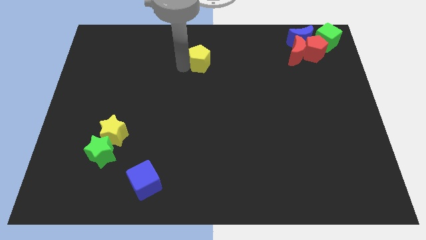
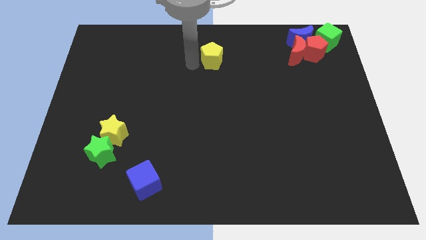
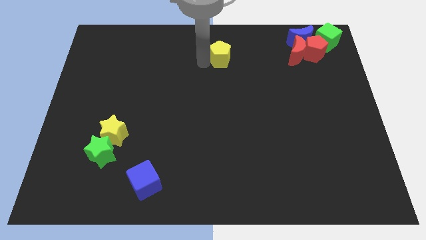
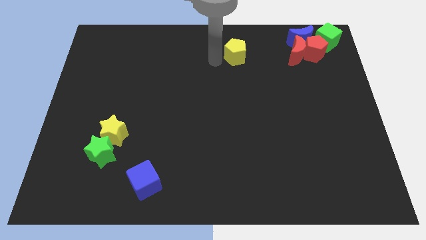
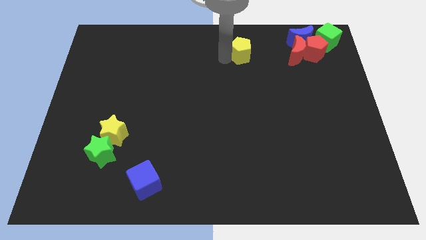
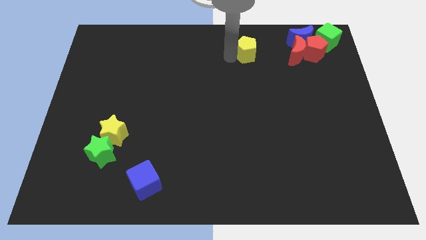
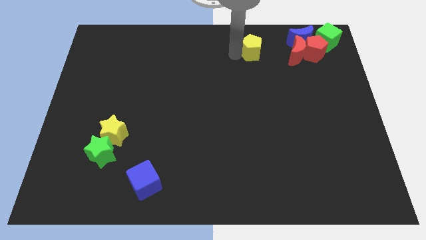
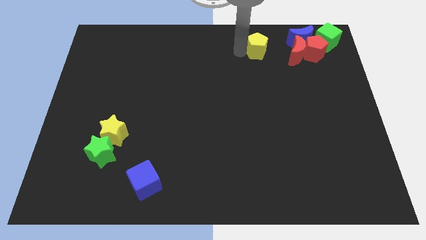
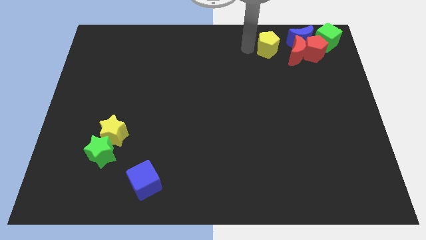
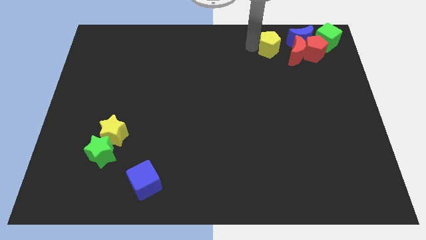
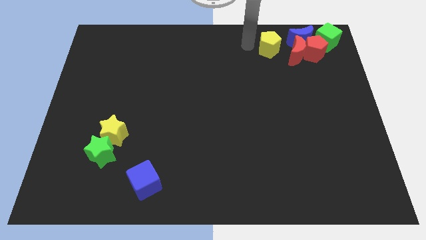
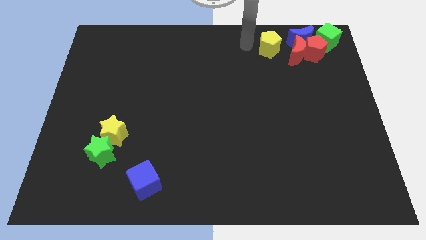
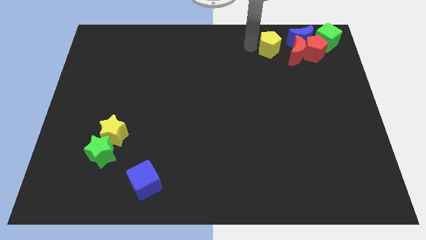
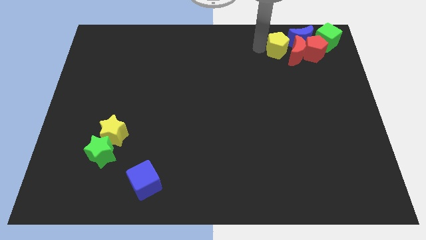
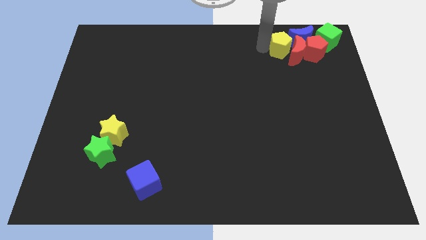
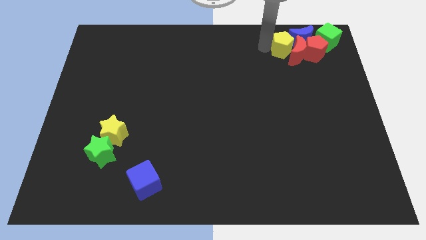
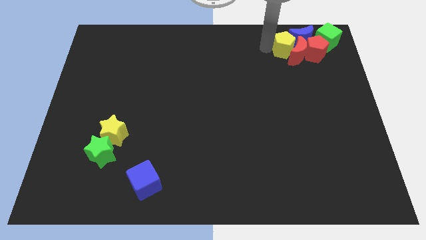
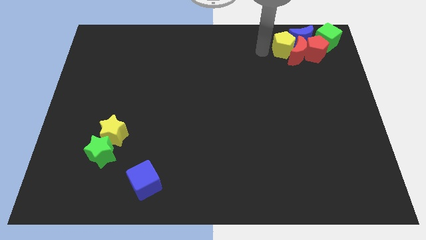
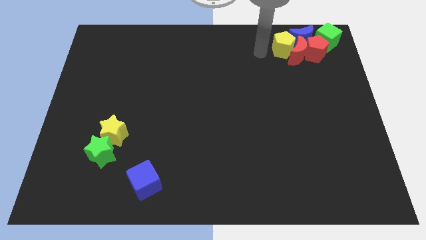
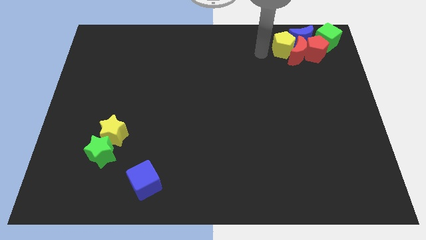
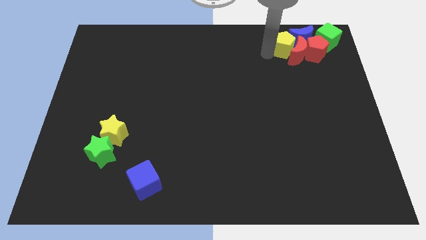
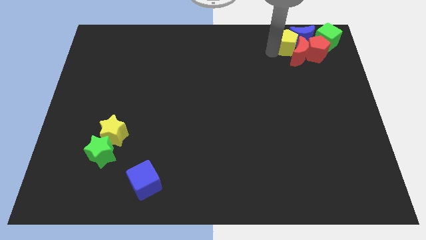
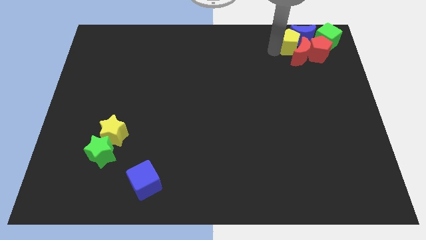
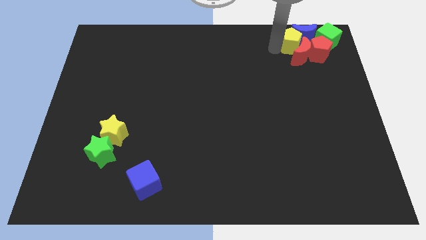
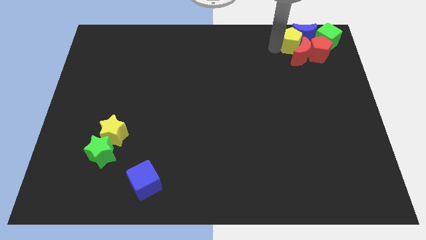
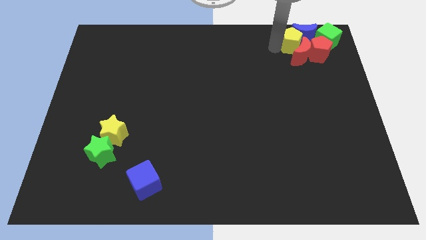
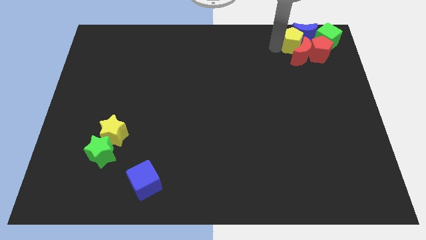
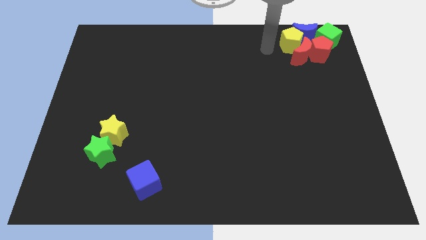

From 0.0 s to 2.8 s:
push the yellow pentagon into the group of blocks

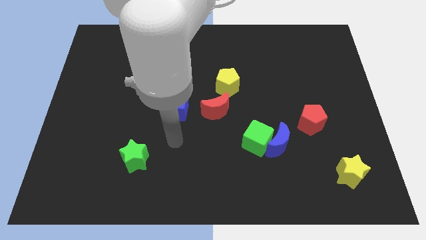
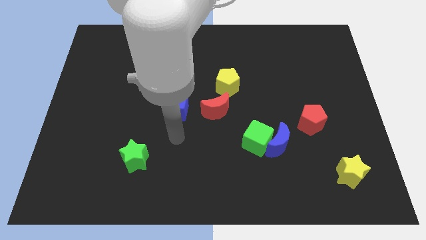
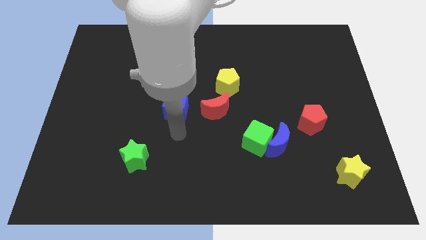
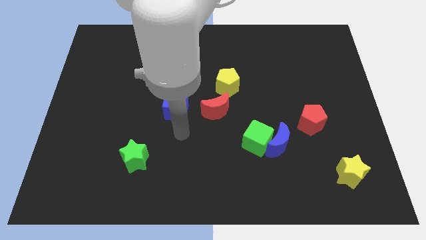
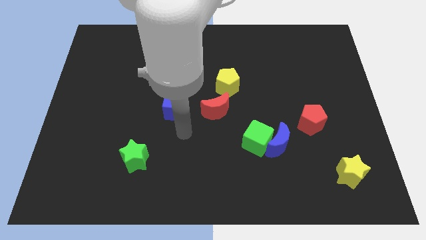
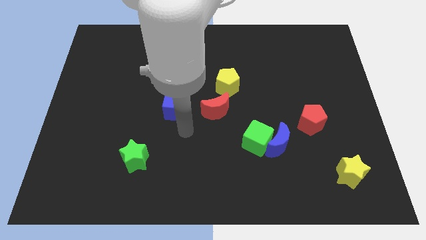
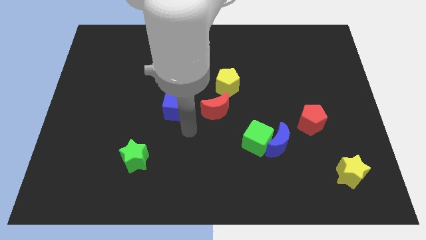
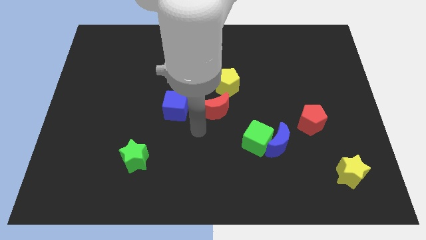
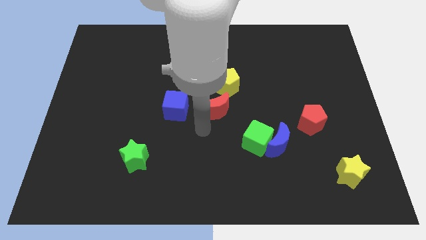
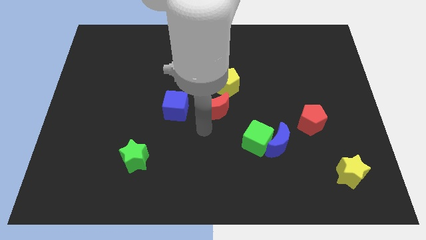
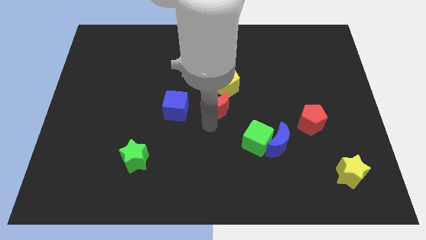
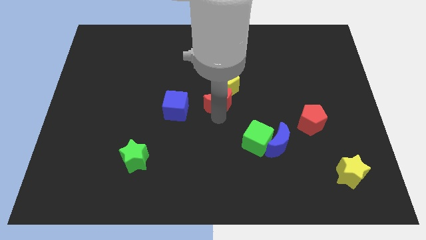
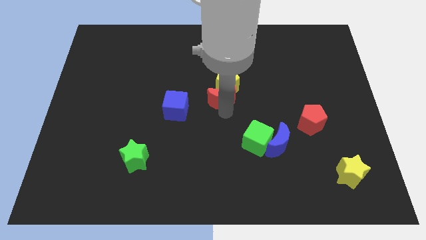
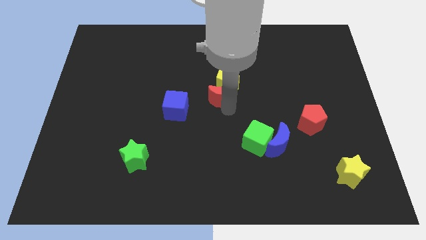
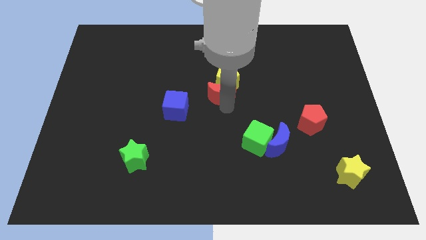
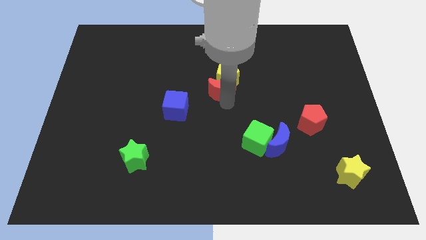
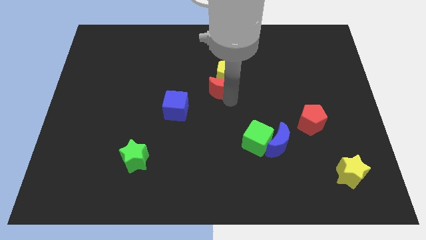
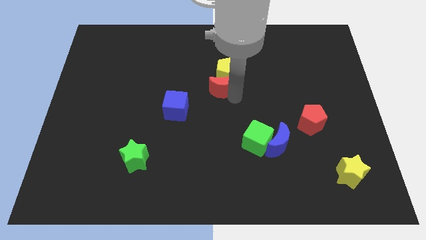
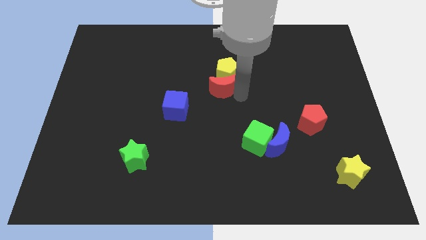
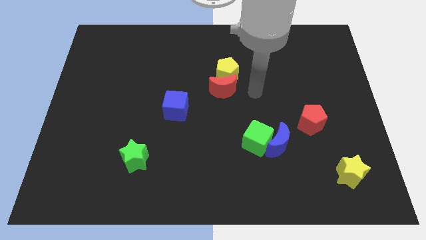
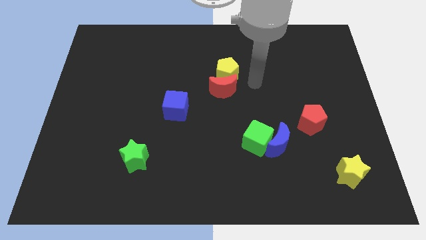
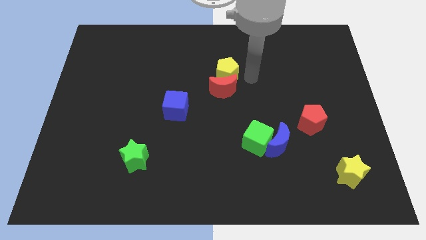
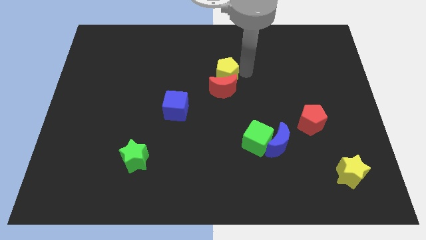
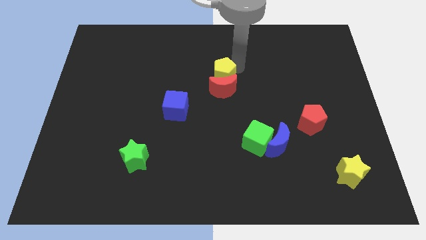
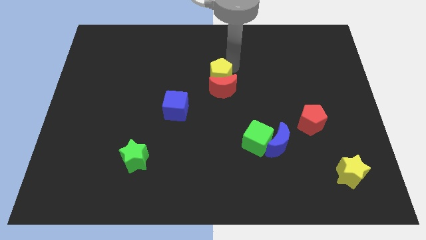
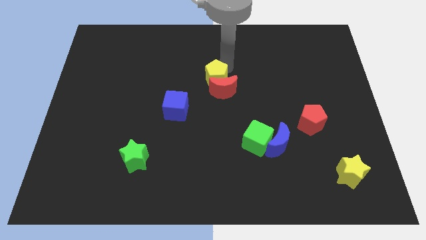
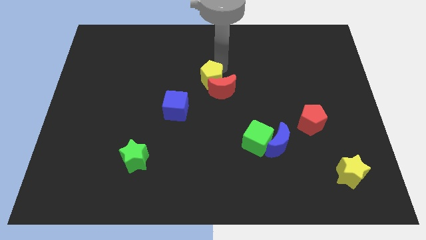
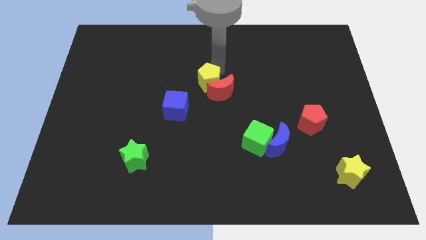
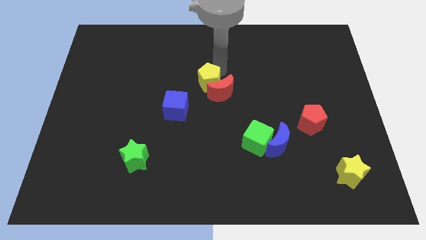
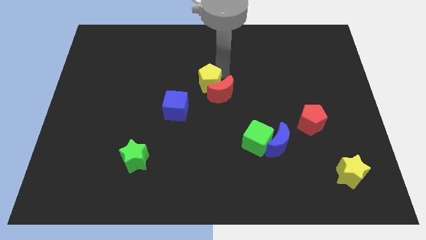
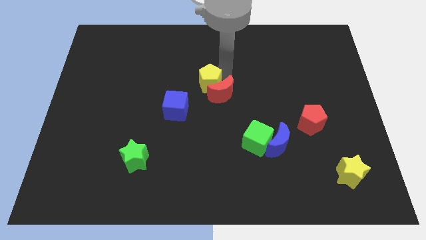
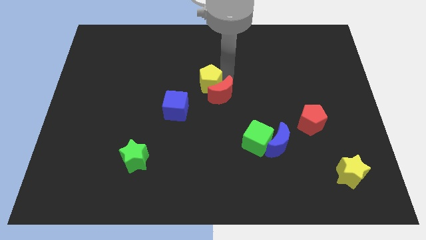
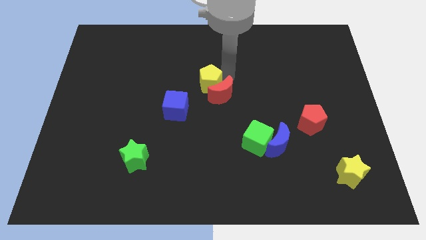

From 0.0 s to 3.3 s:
slightly push the red moon and yellow pentagon towards top

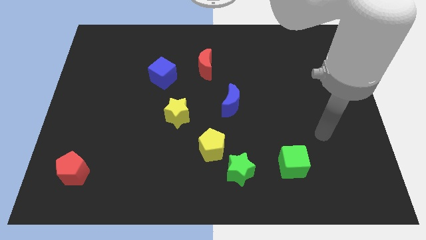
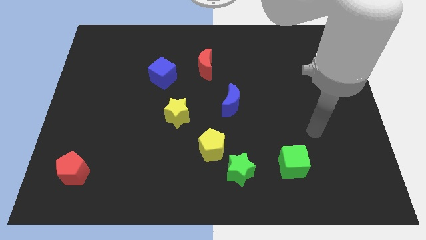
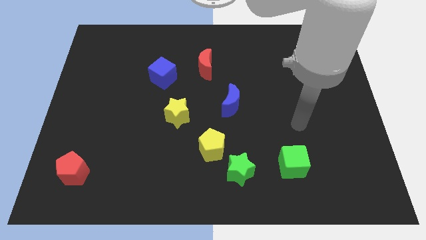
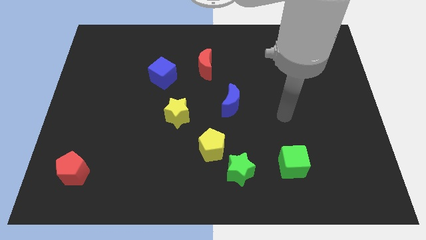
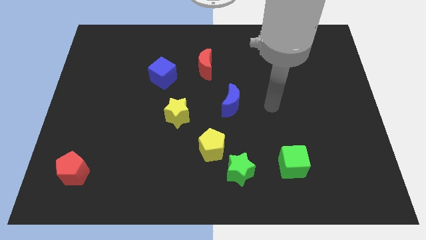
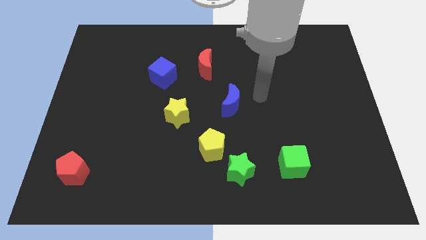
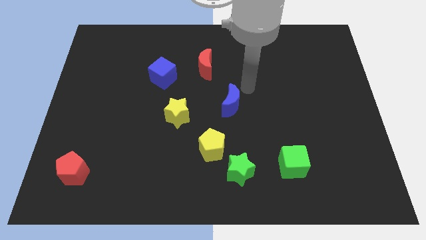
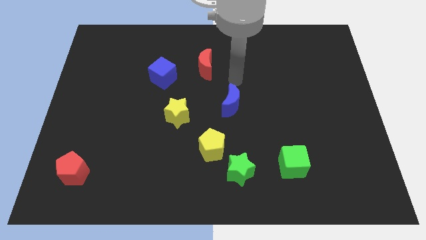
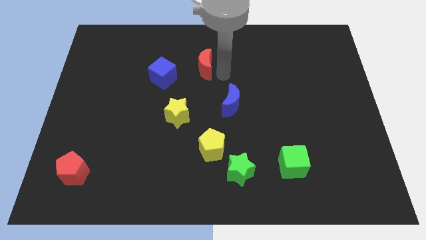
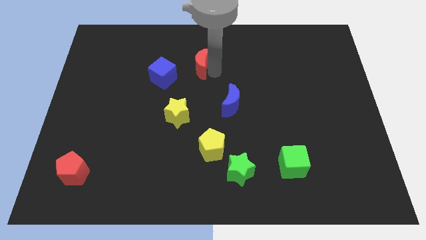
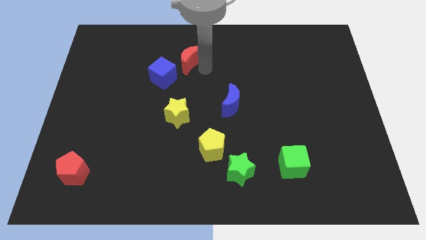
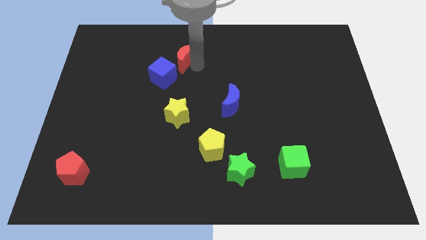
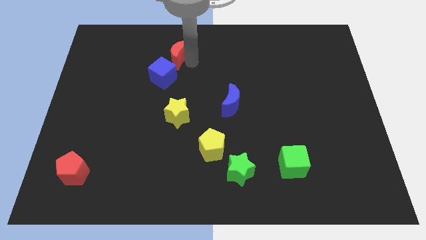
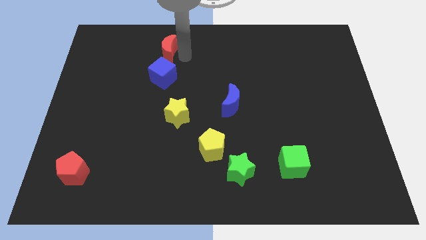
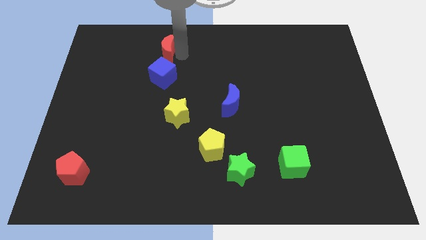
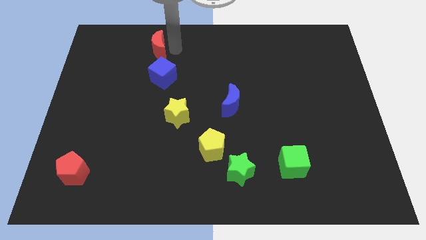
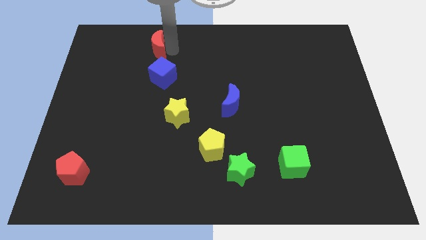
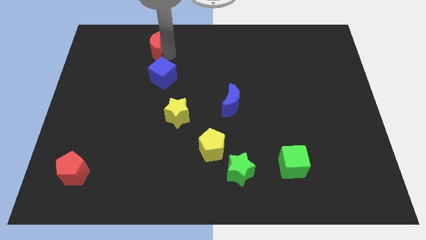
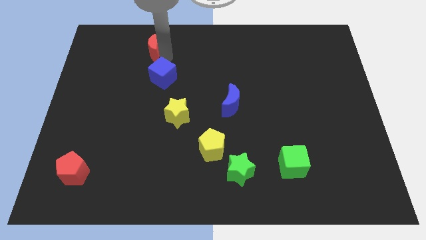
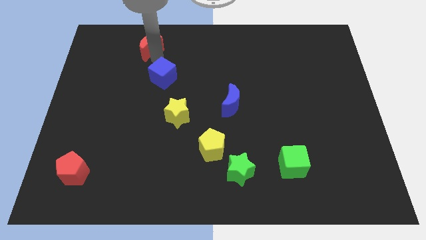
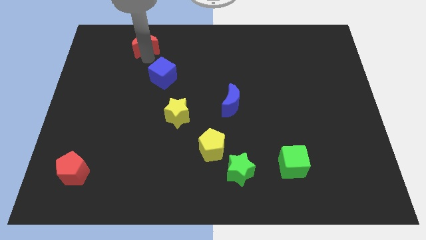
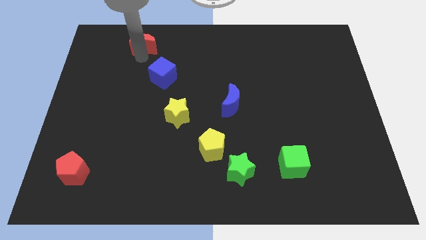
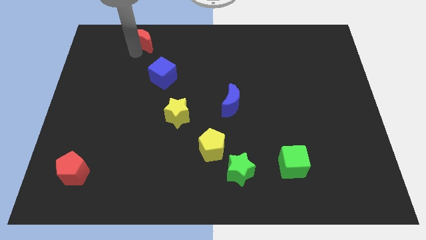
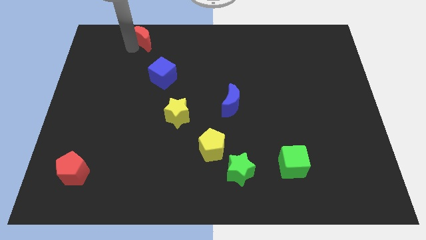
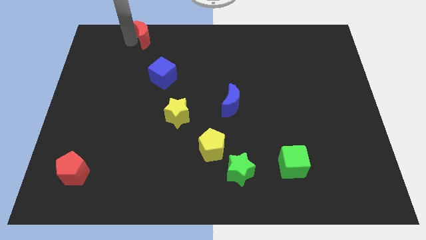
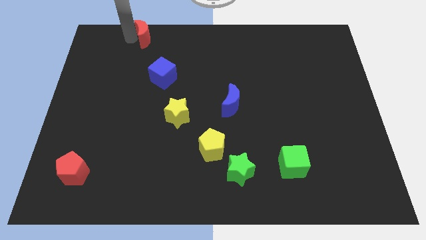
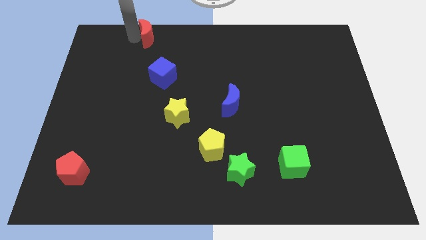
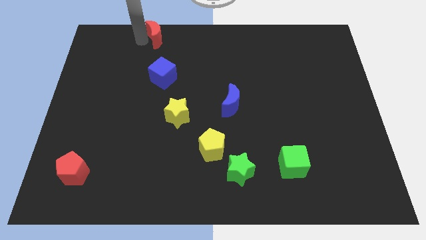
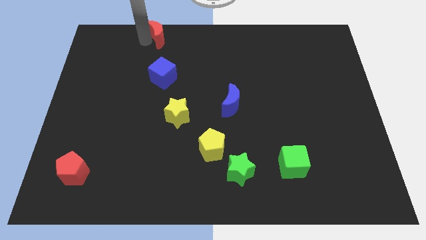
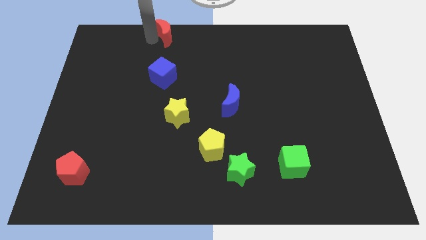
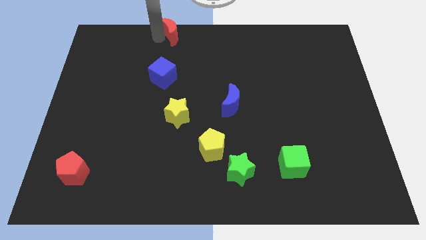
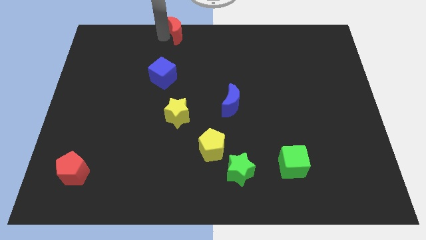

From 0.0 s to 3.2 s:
move the red crescent above the blue cube
